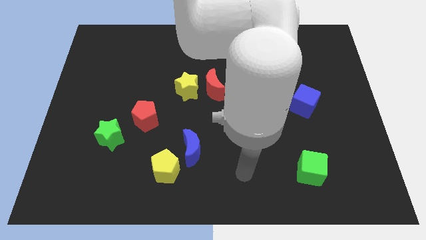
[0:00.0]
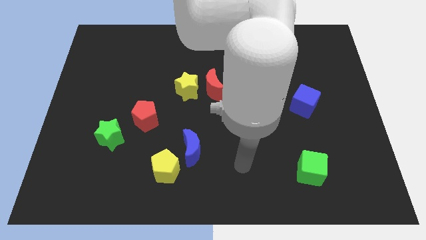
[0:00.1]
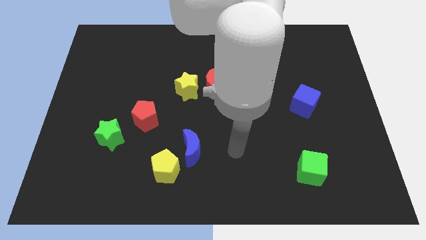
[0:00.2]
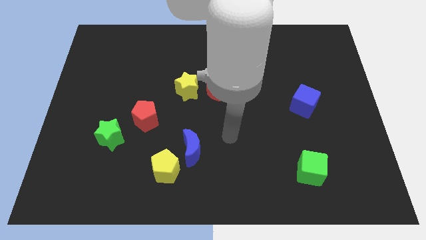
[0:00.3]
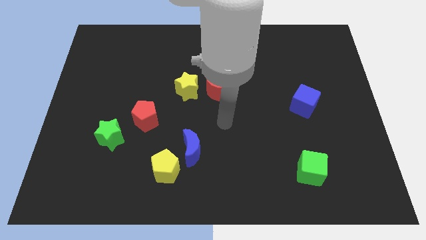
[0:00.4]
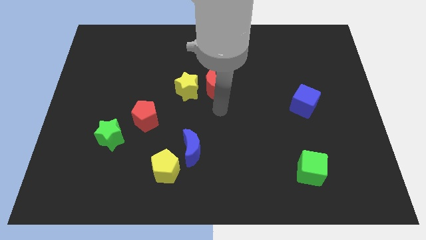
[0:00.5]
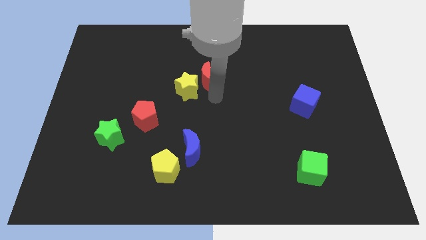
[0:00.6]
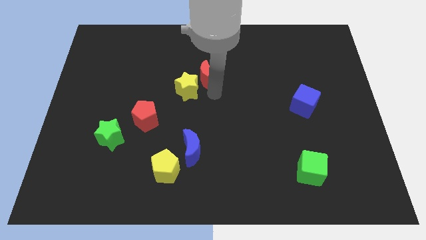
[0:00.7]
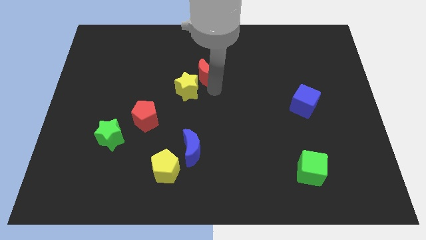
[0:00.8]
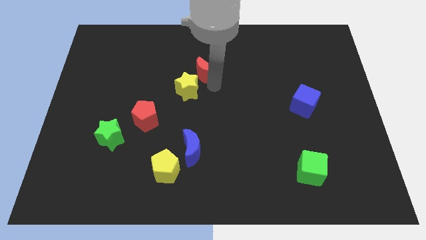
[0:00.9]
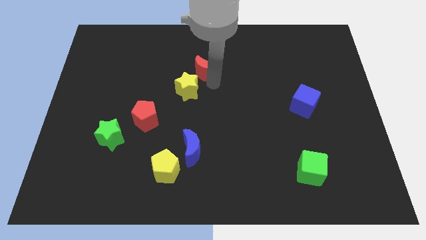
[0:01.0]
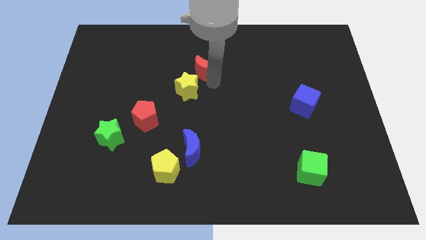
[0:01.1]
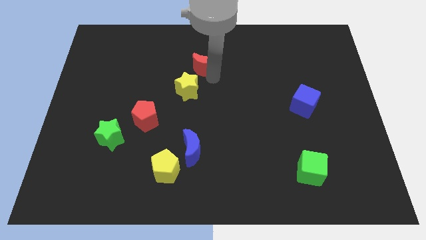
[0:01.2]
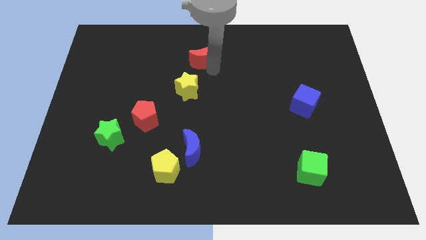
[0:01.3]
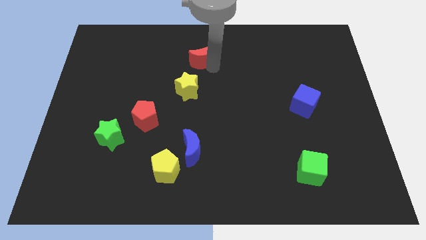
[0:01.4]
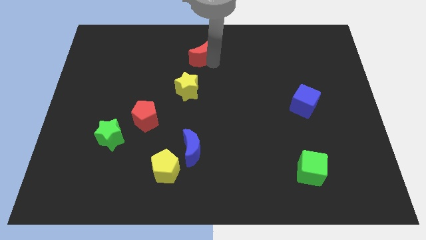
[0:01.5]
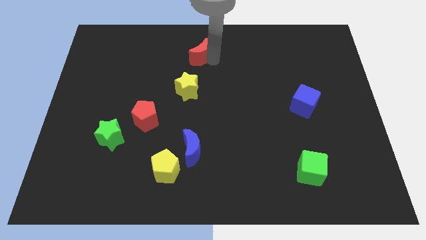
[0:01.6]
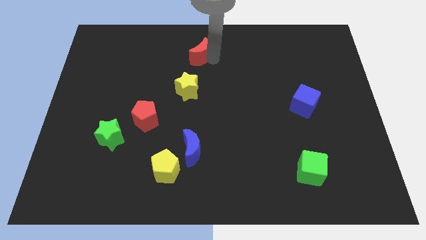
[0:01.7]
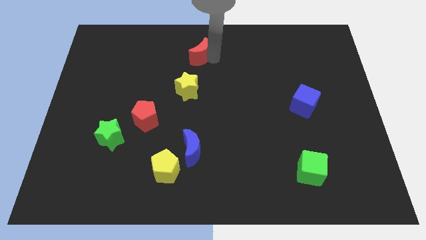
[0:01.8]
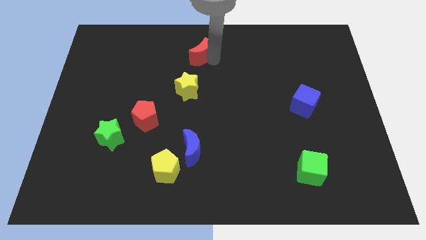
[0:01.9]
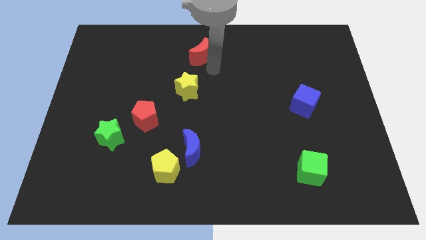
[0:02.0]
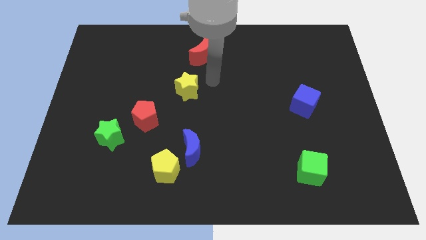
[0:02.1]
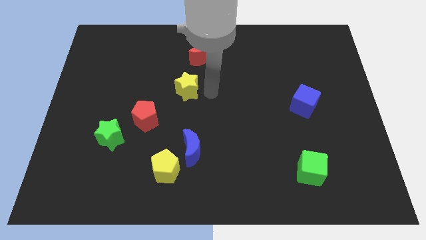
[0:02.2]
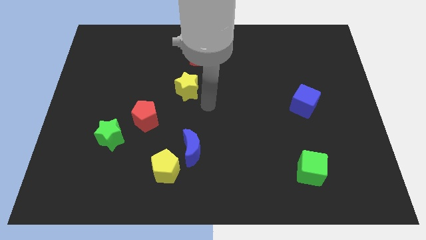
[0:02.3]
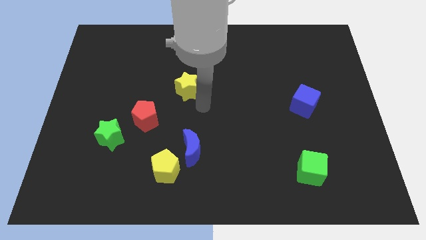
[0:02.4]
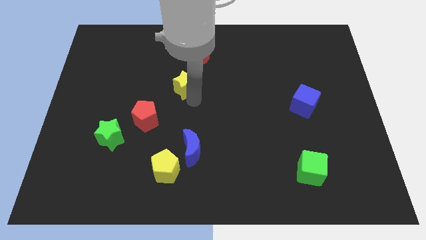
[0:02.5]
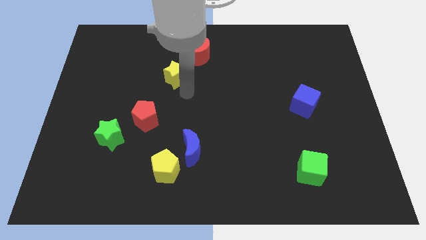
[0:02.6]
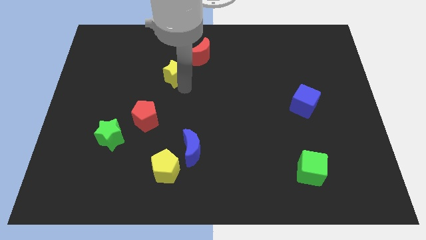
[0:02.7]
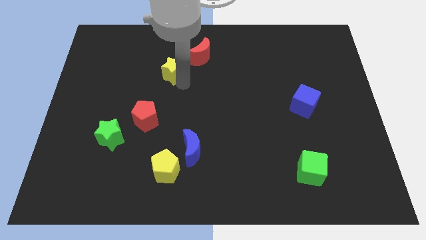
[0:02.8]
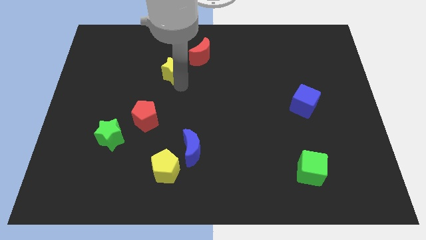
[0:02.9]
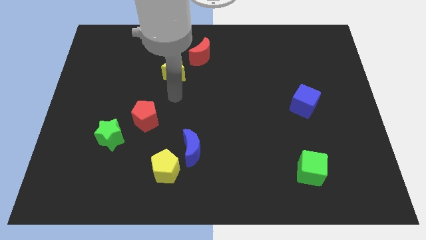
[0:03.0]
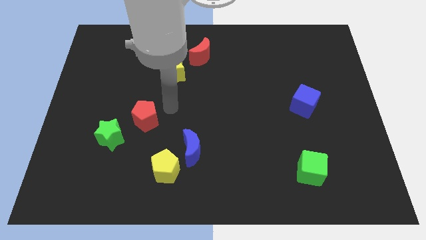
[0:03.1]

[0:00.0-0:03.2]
move the red crescent and yellow star towards the top center

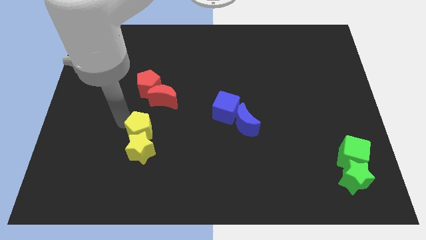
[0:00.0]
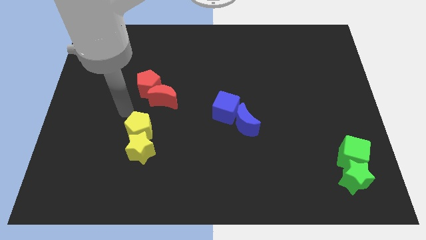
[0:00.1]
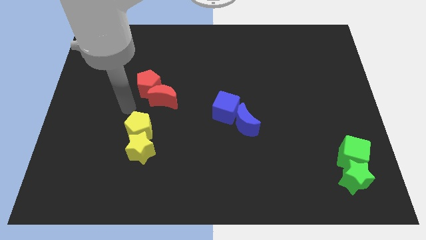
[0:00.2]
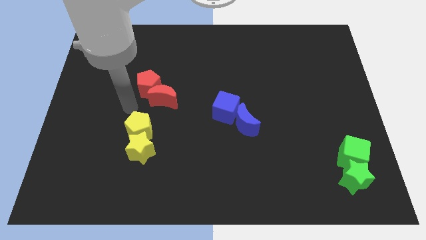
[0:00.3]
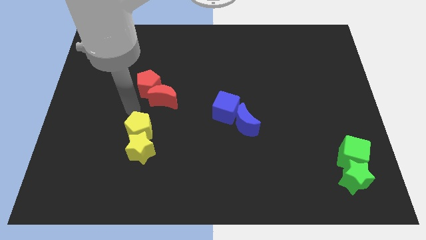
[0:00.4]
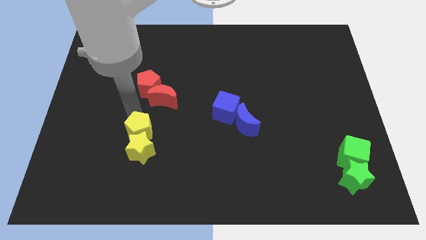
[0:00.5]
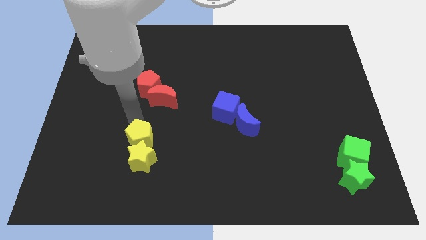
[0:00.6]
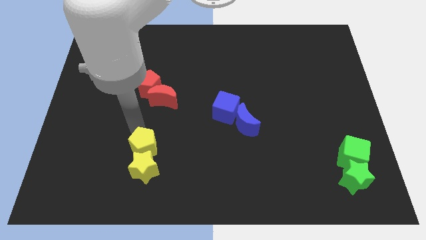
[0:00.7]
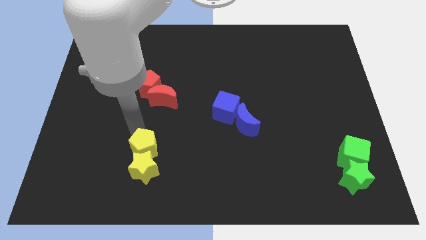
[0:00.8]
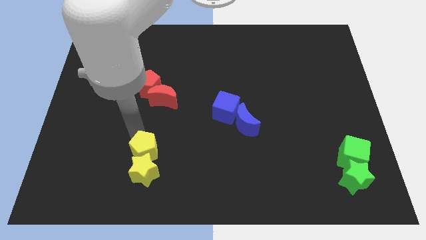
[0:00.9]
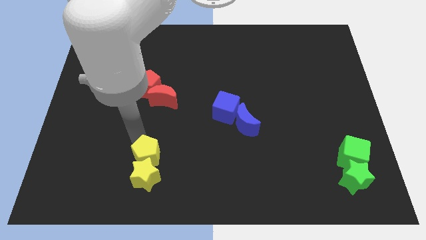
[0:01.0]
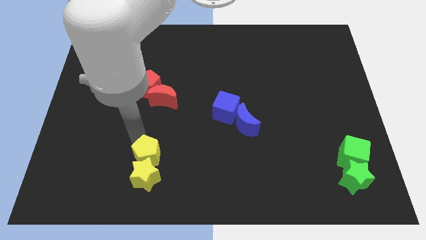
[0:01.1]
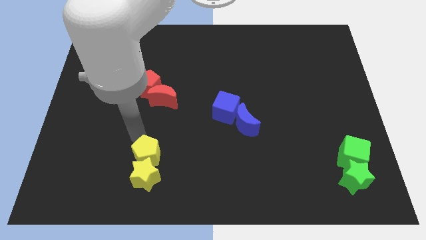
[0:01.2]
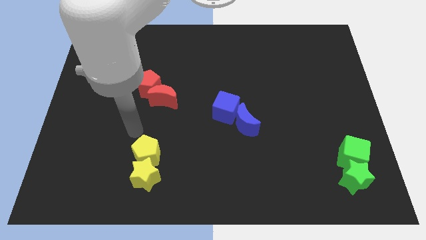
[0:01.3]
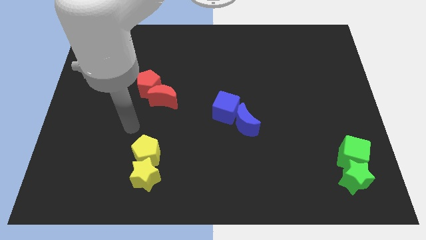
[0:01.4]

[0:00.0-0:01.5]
push the yellow pentagon into the yellow star

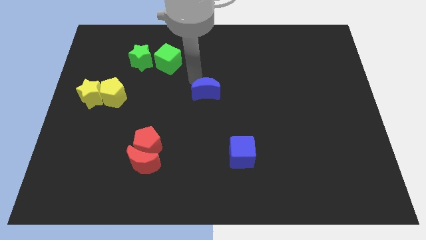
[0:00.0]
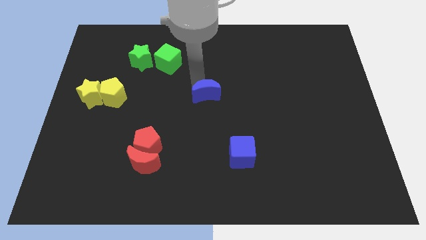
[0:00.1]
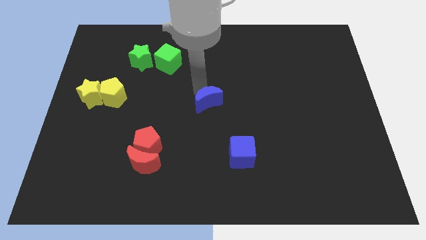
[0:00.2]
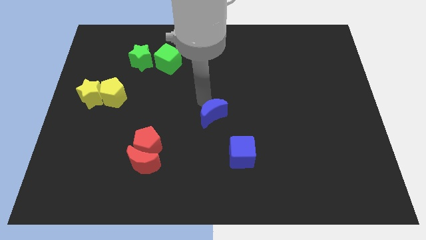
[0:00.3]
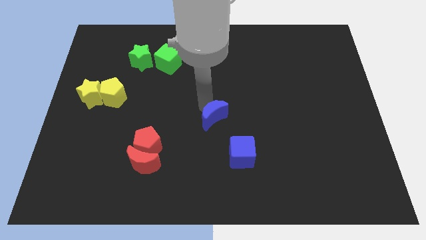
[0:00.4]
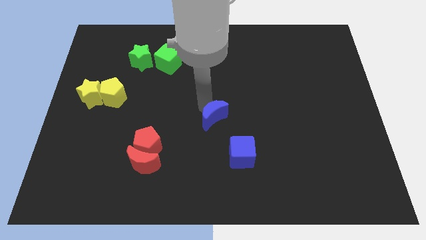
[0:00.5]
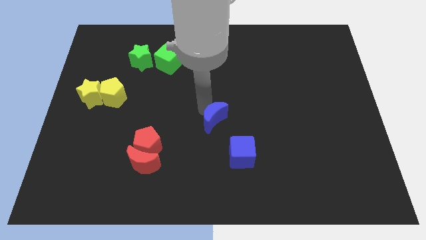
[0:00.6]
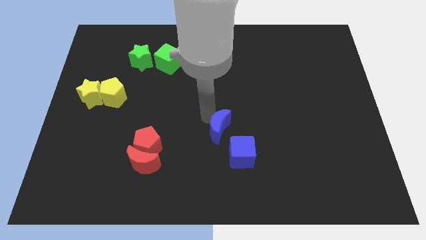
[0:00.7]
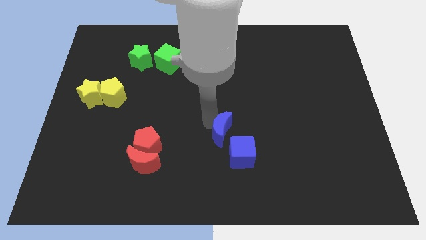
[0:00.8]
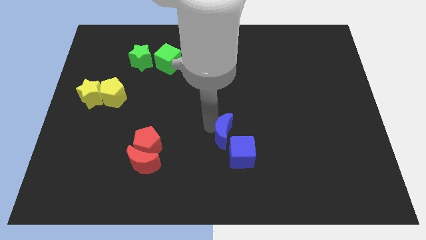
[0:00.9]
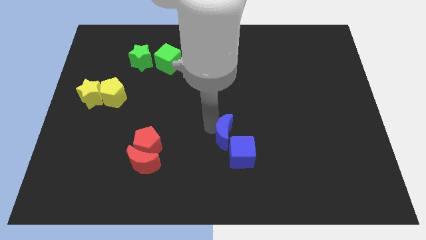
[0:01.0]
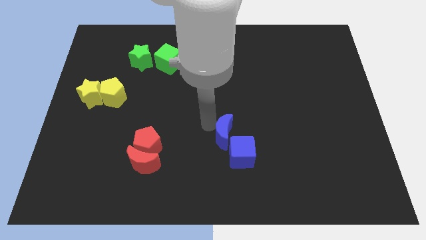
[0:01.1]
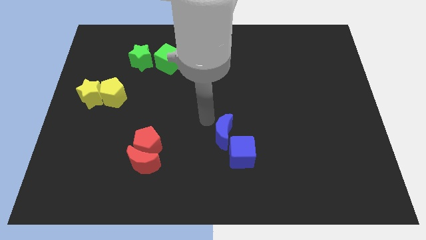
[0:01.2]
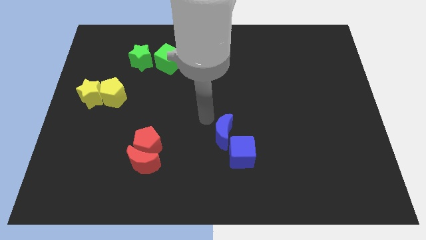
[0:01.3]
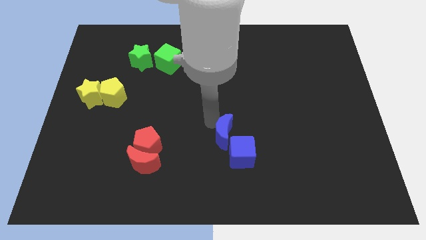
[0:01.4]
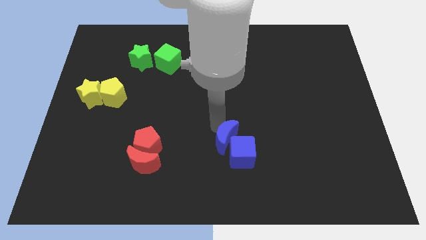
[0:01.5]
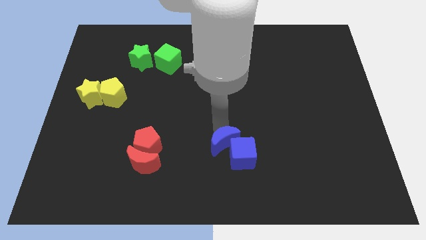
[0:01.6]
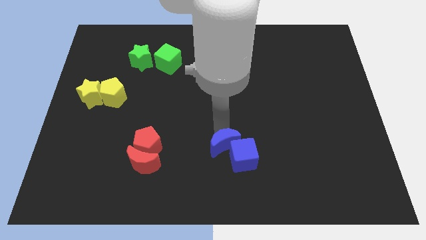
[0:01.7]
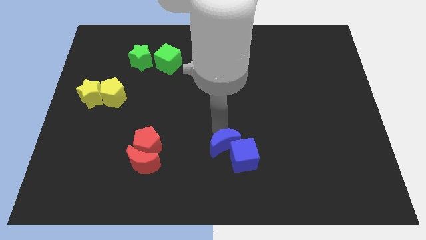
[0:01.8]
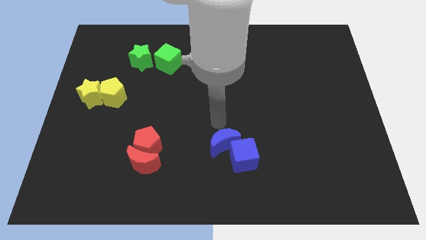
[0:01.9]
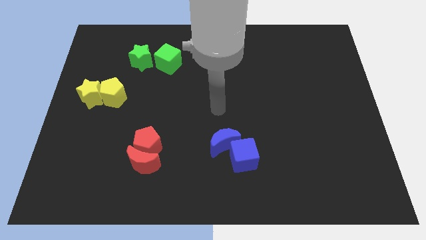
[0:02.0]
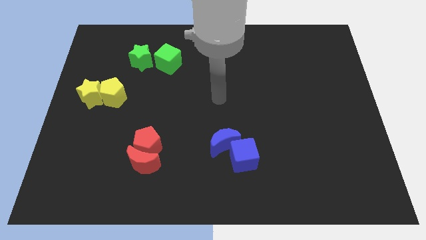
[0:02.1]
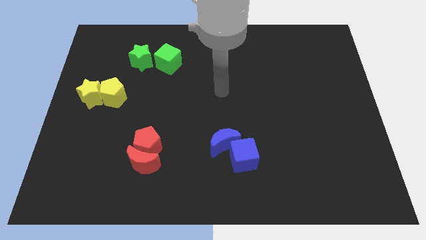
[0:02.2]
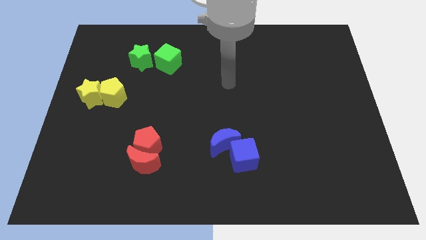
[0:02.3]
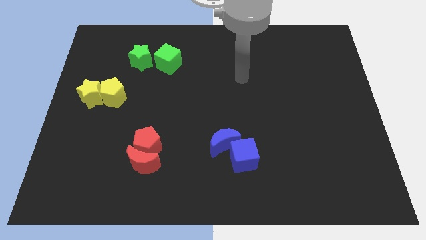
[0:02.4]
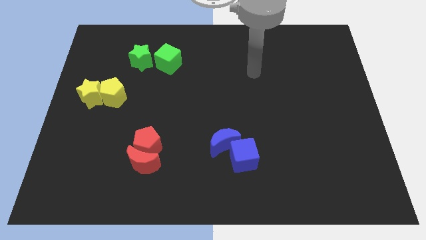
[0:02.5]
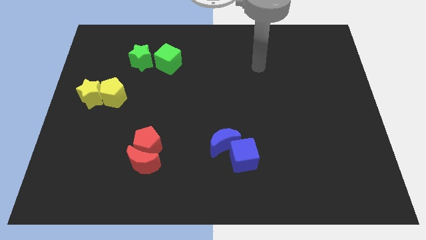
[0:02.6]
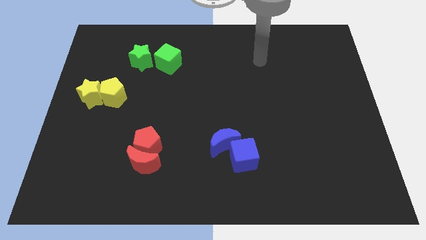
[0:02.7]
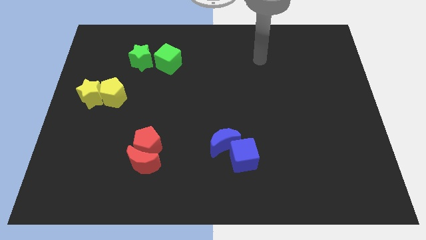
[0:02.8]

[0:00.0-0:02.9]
push blue crescent into the blue cube

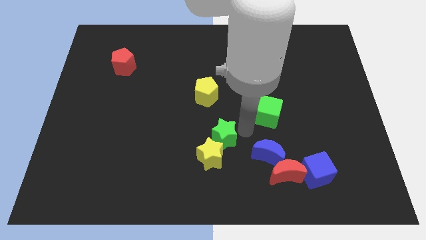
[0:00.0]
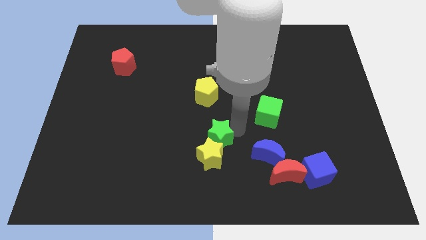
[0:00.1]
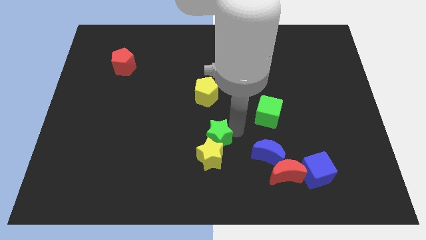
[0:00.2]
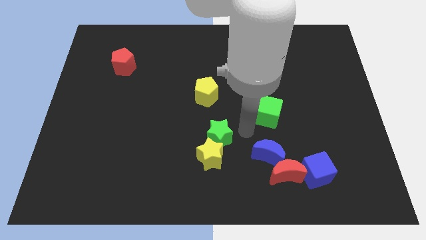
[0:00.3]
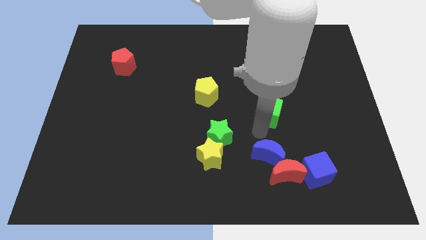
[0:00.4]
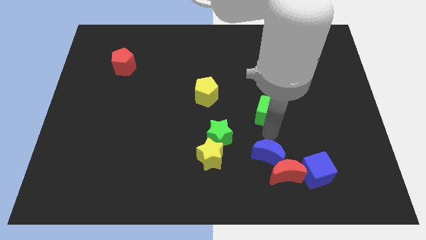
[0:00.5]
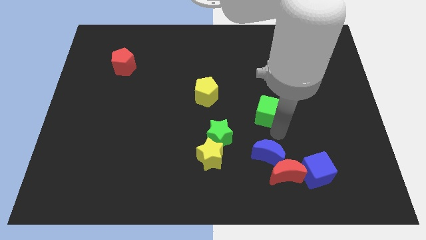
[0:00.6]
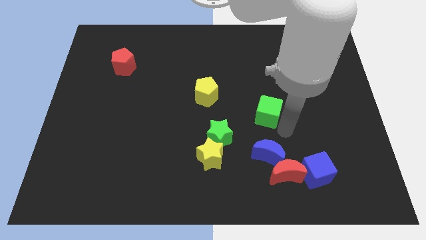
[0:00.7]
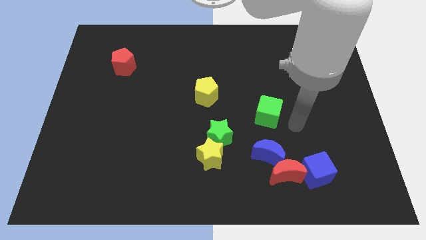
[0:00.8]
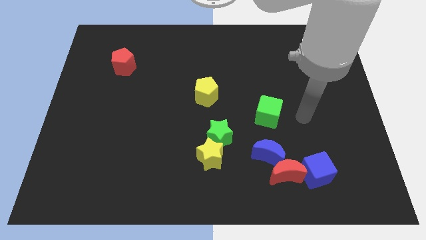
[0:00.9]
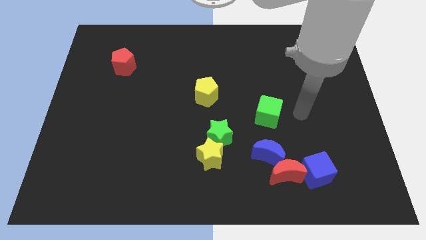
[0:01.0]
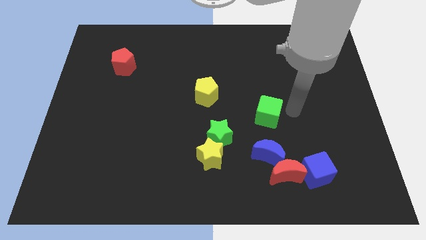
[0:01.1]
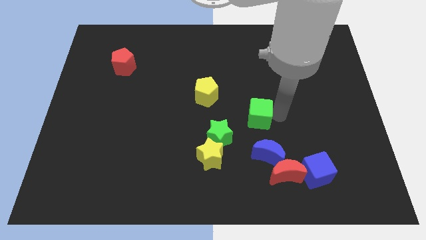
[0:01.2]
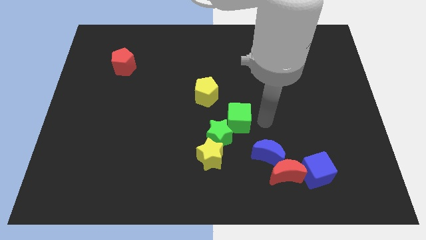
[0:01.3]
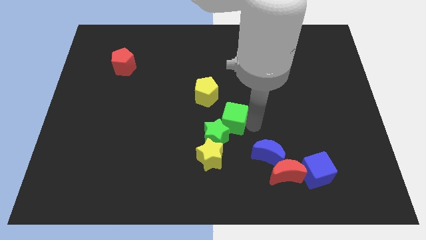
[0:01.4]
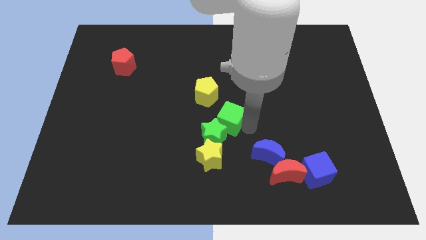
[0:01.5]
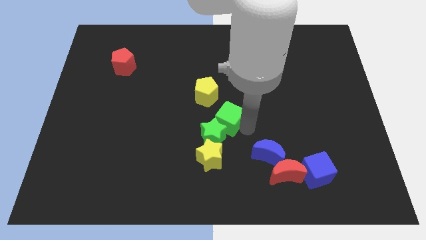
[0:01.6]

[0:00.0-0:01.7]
move the green cube into the green star
